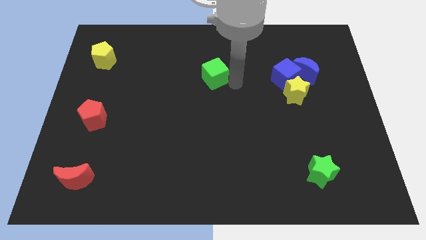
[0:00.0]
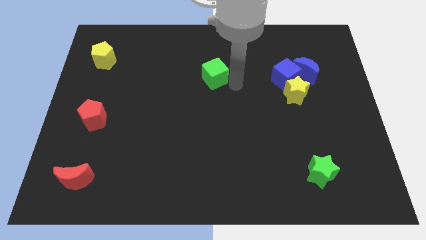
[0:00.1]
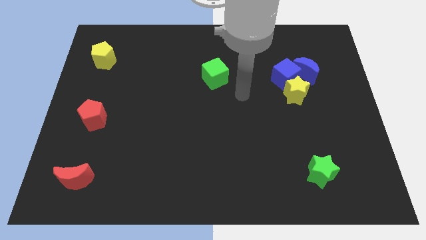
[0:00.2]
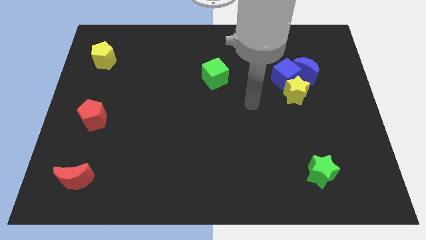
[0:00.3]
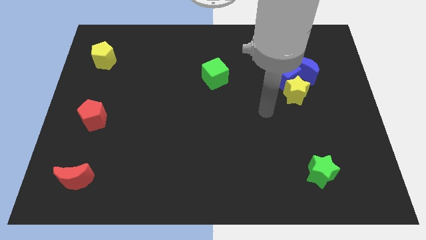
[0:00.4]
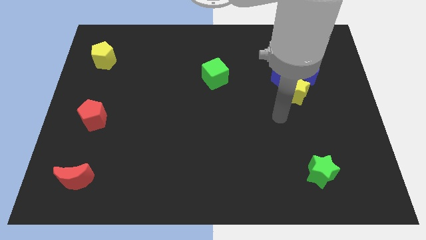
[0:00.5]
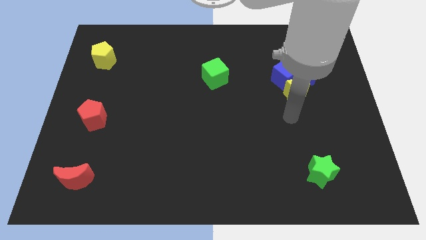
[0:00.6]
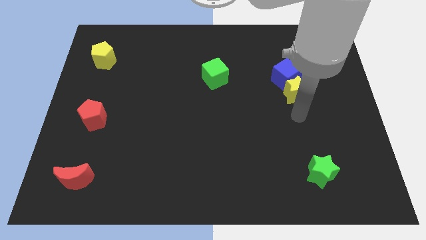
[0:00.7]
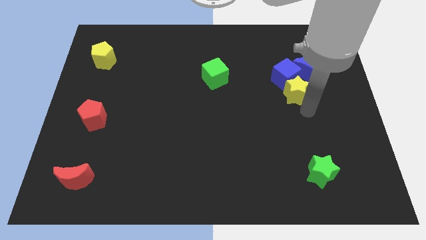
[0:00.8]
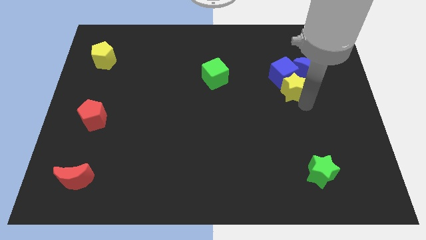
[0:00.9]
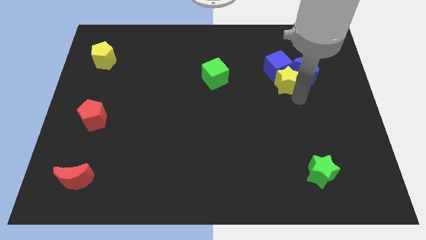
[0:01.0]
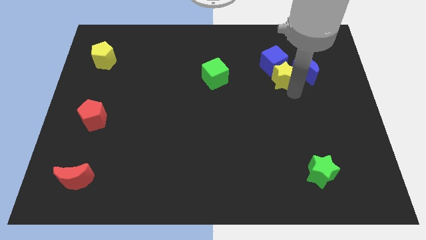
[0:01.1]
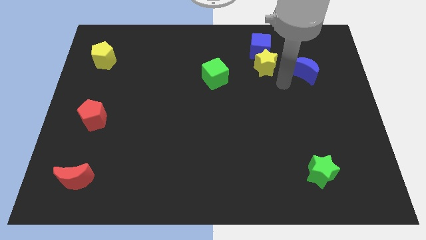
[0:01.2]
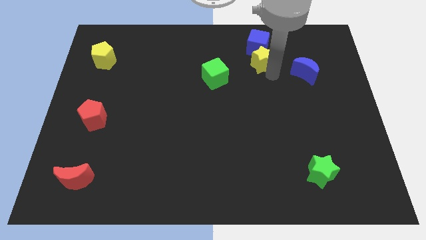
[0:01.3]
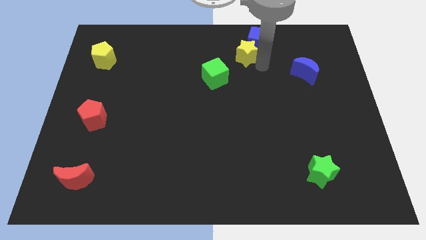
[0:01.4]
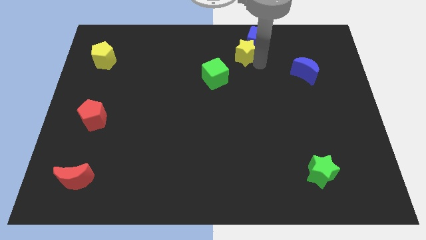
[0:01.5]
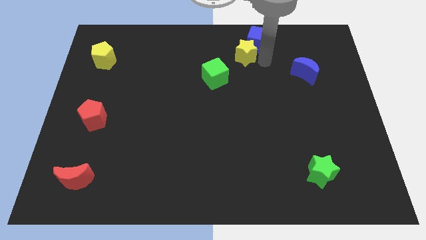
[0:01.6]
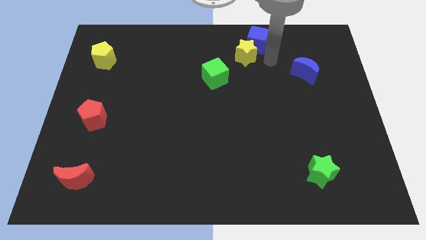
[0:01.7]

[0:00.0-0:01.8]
push the blue cube with the yellow star towards the top side

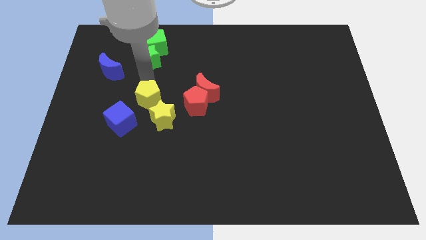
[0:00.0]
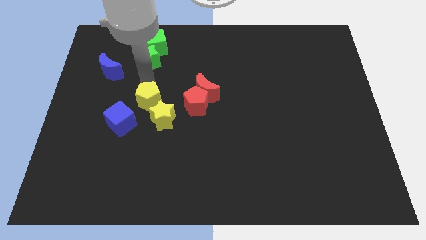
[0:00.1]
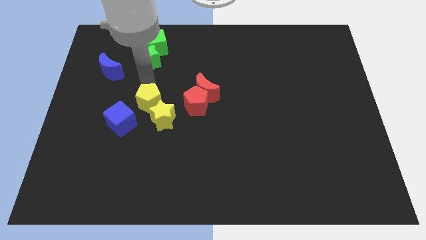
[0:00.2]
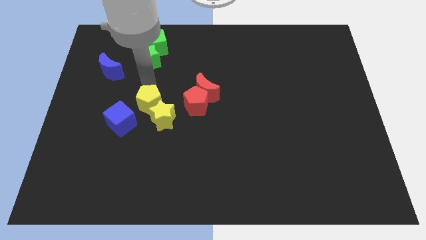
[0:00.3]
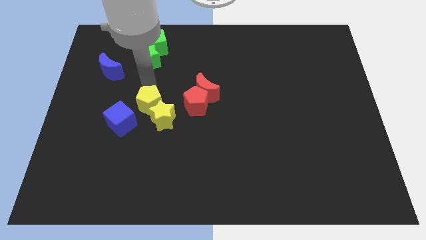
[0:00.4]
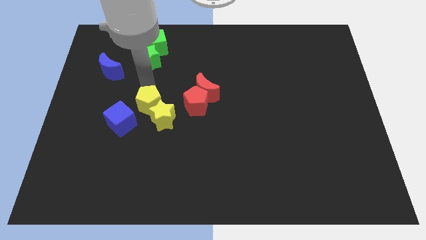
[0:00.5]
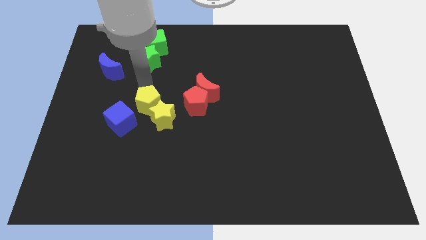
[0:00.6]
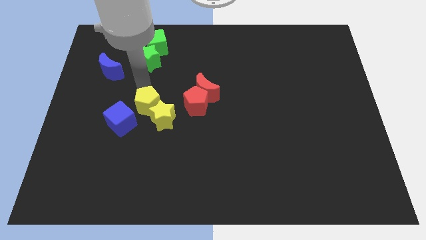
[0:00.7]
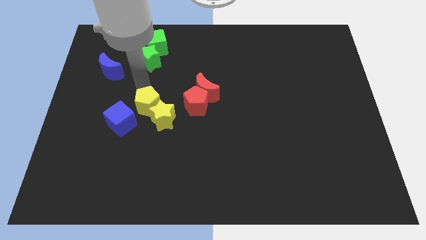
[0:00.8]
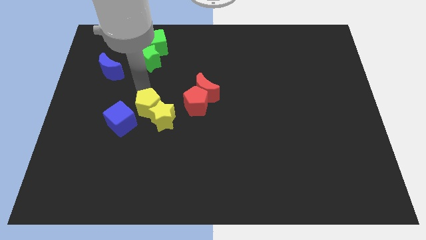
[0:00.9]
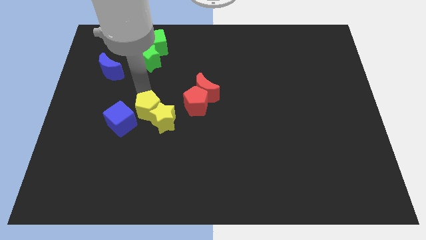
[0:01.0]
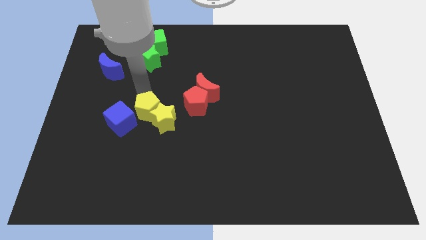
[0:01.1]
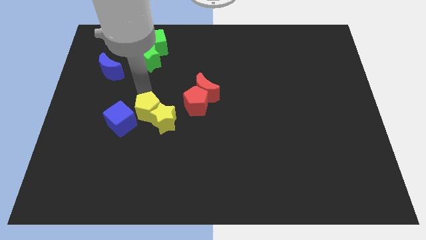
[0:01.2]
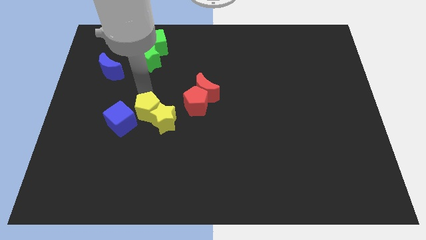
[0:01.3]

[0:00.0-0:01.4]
push the yellow pentagon slightly into the yellow star

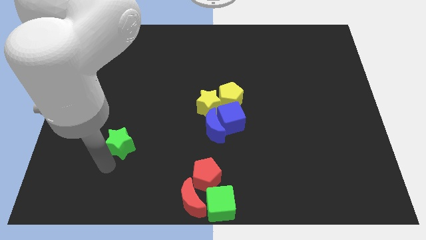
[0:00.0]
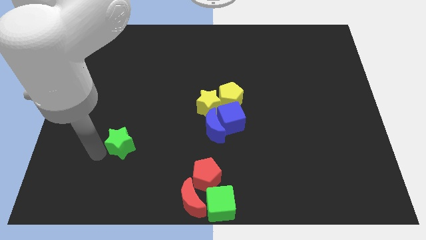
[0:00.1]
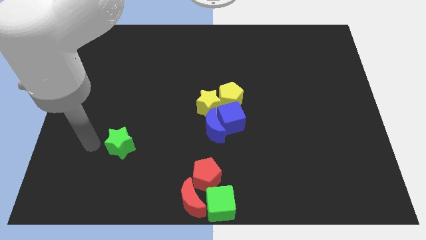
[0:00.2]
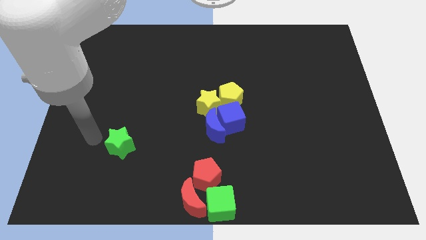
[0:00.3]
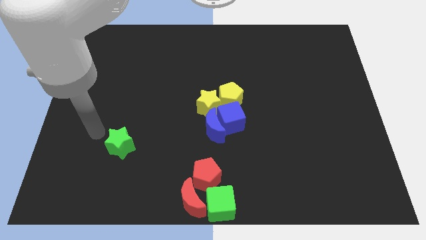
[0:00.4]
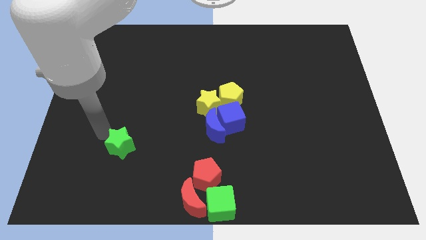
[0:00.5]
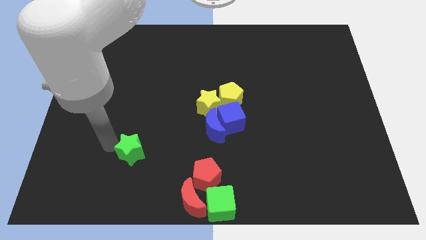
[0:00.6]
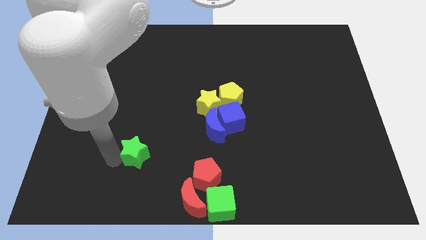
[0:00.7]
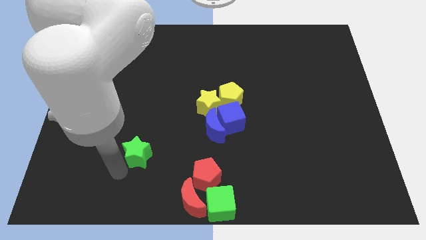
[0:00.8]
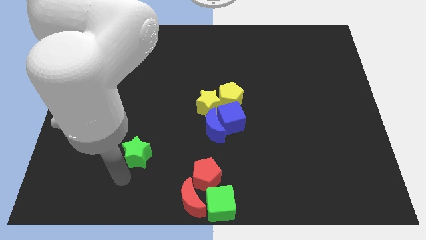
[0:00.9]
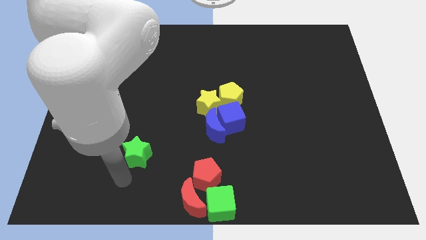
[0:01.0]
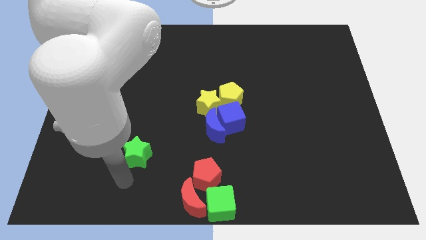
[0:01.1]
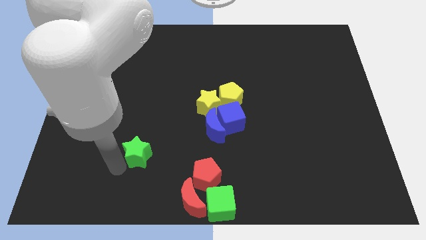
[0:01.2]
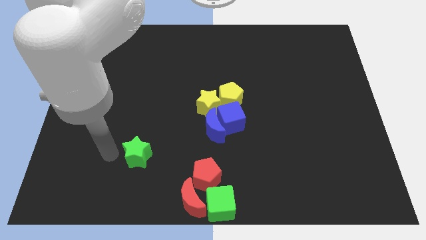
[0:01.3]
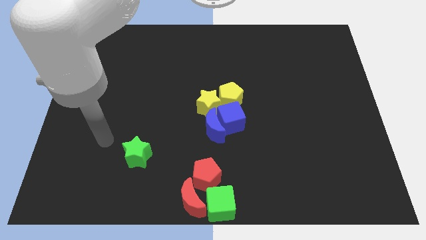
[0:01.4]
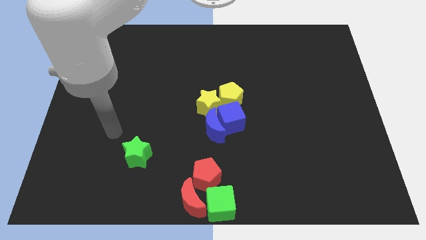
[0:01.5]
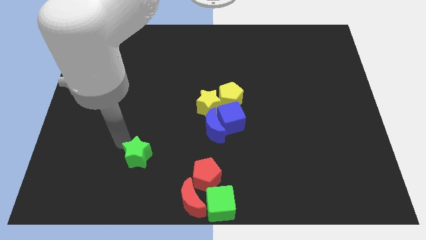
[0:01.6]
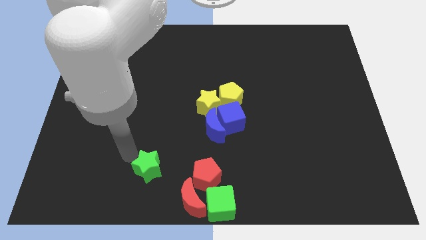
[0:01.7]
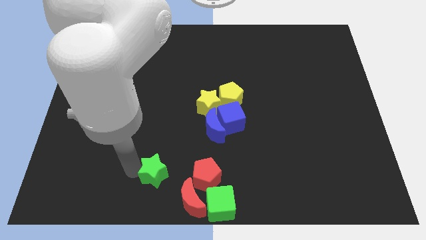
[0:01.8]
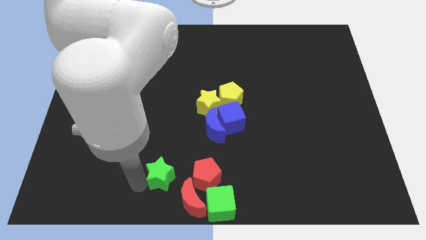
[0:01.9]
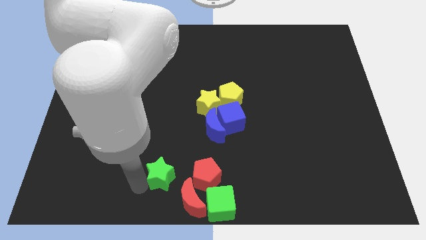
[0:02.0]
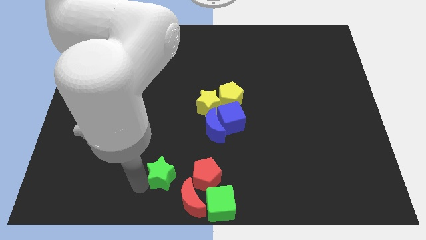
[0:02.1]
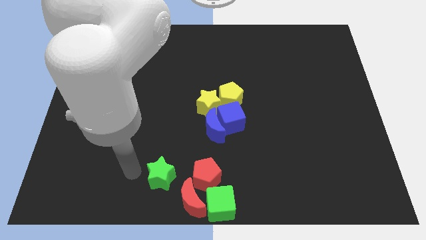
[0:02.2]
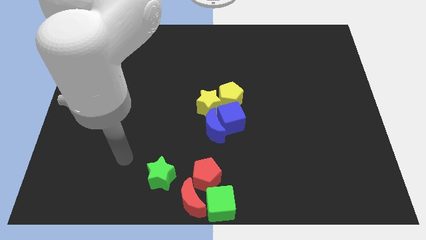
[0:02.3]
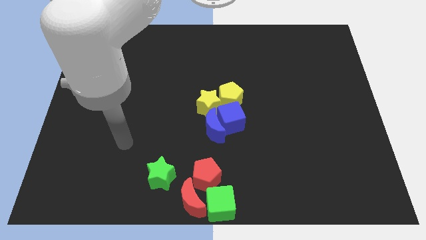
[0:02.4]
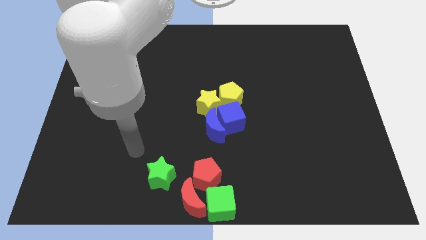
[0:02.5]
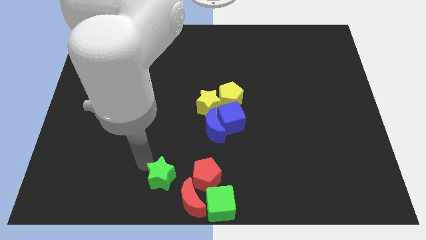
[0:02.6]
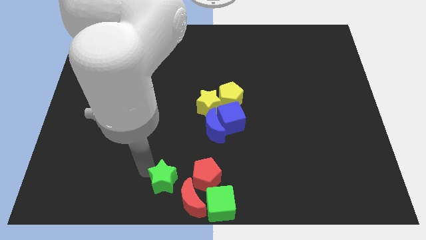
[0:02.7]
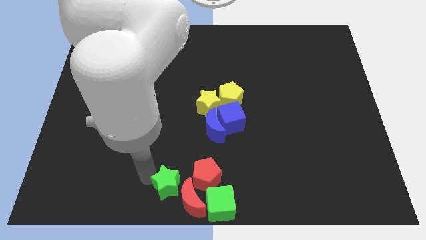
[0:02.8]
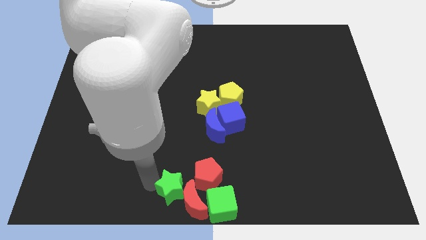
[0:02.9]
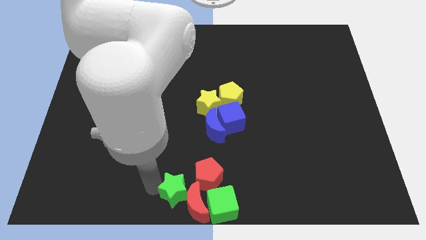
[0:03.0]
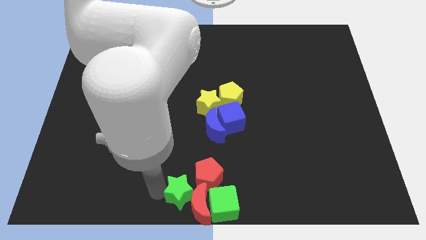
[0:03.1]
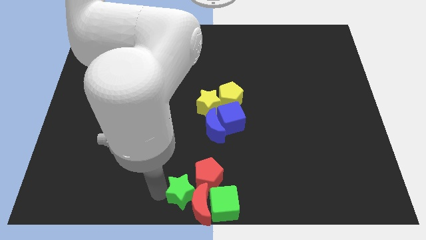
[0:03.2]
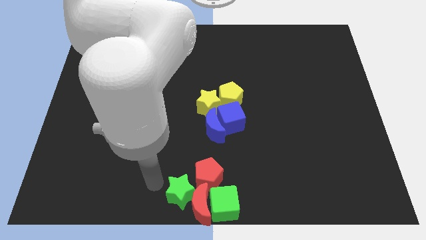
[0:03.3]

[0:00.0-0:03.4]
push green star into red crescent

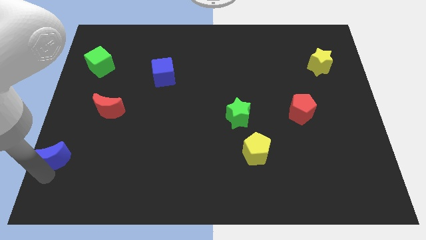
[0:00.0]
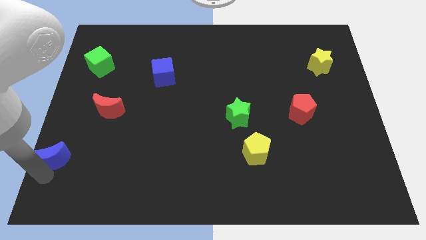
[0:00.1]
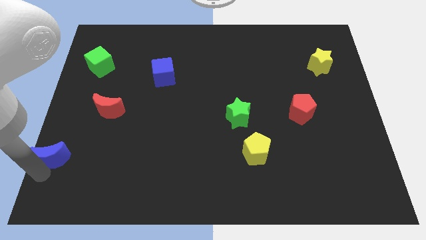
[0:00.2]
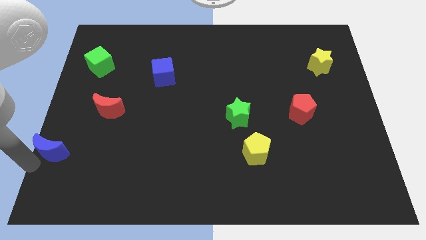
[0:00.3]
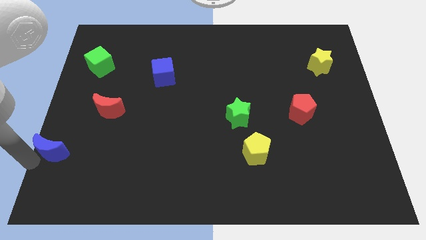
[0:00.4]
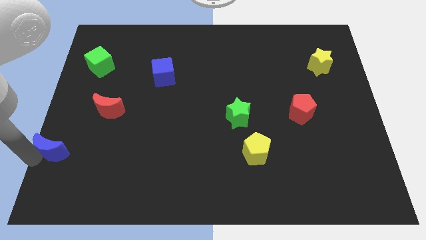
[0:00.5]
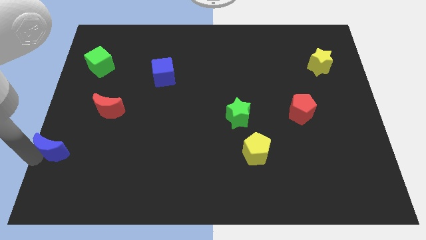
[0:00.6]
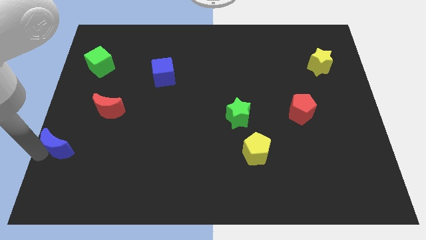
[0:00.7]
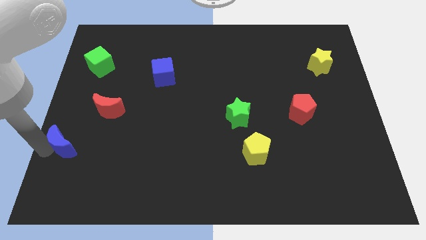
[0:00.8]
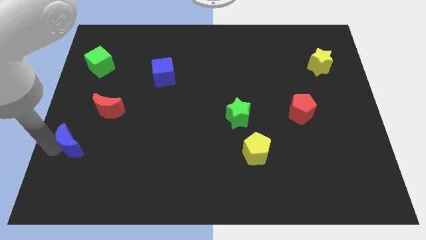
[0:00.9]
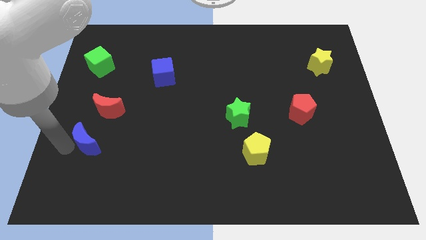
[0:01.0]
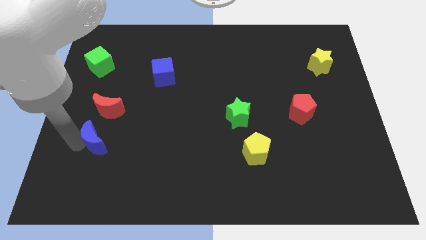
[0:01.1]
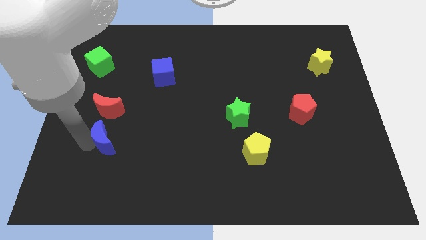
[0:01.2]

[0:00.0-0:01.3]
drag the blue moon to the bottom side of the red moon

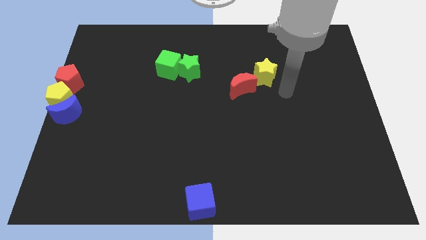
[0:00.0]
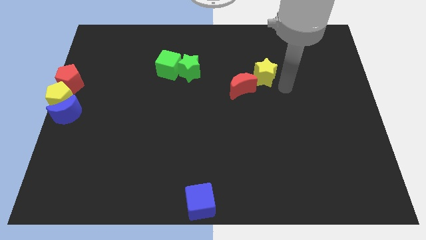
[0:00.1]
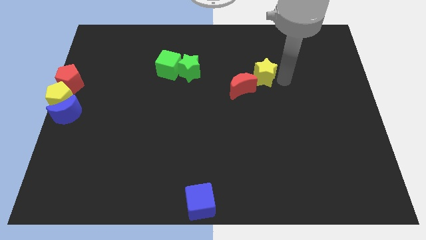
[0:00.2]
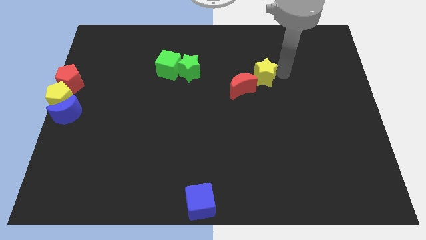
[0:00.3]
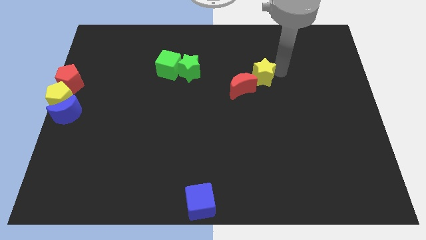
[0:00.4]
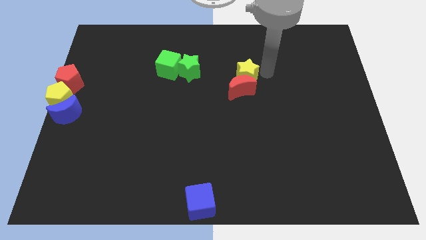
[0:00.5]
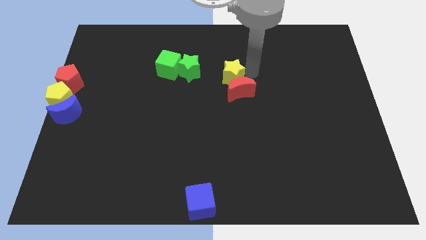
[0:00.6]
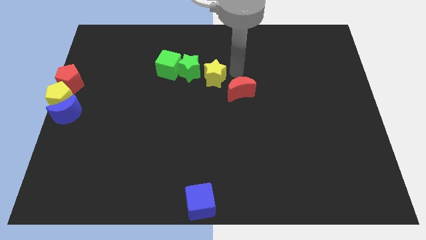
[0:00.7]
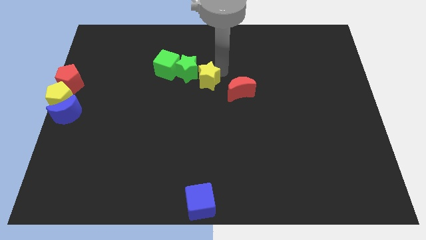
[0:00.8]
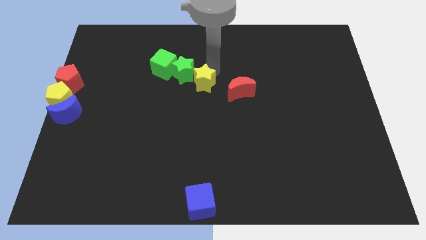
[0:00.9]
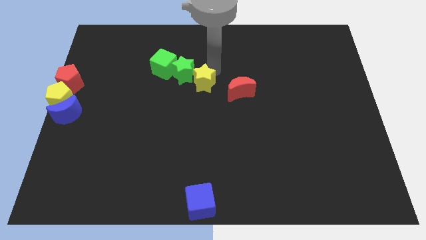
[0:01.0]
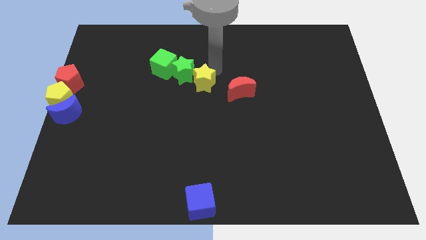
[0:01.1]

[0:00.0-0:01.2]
separate the yellow star and red moon
